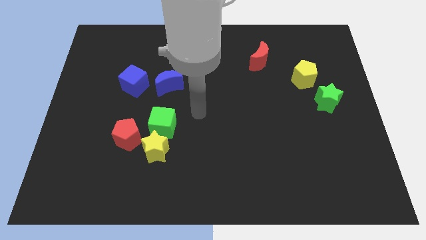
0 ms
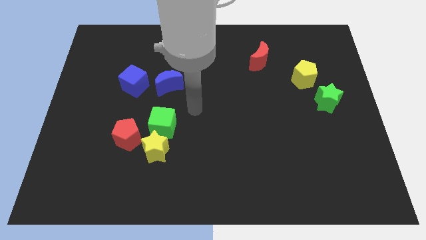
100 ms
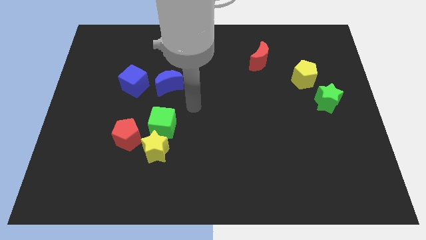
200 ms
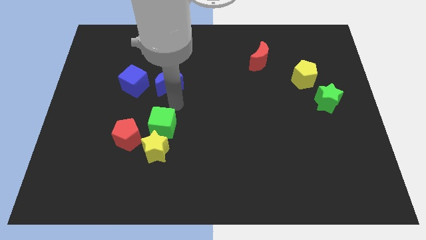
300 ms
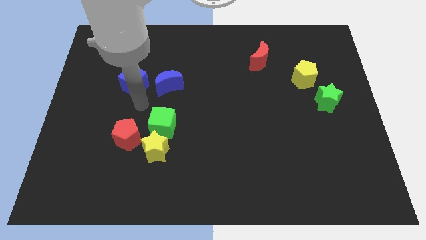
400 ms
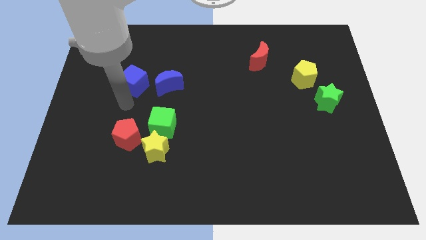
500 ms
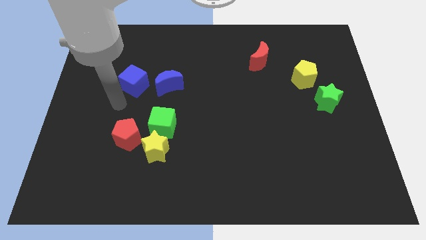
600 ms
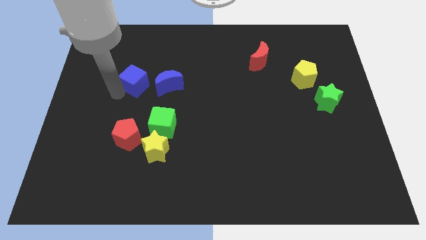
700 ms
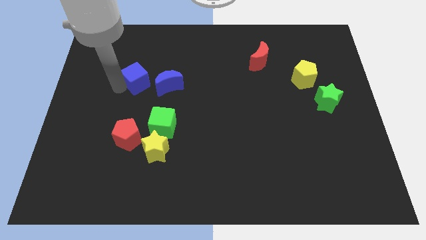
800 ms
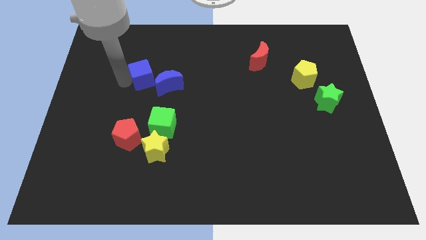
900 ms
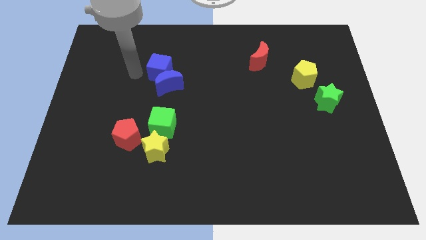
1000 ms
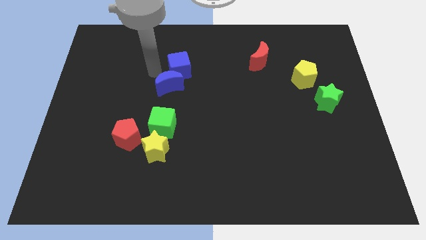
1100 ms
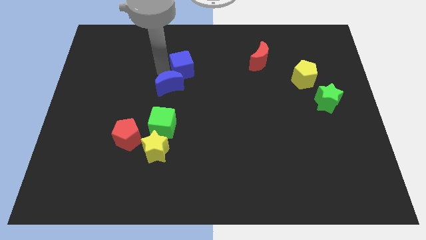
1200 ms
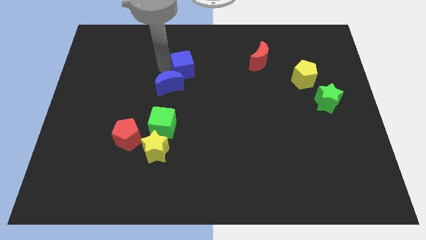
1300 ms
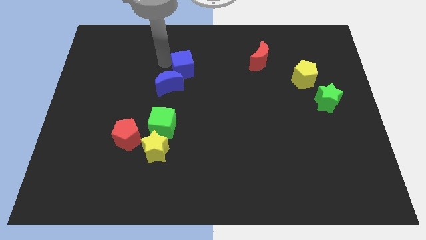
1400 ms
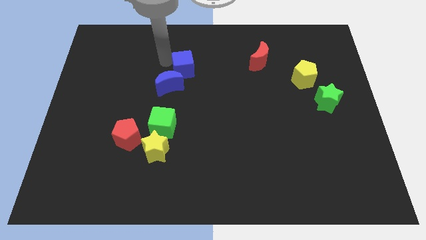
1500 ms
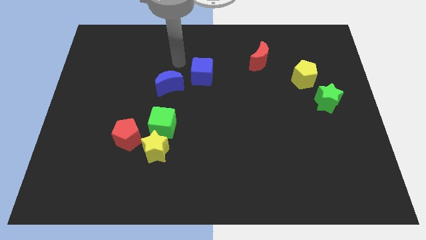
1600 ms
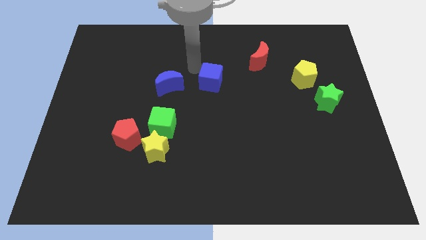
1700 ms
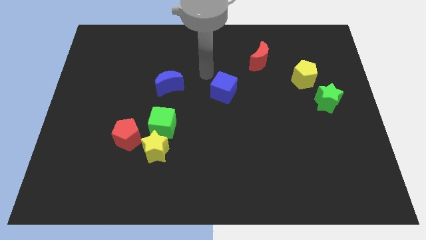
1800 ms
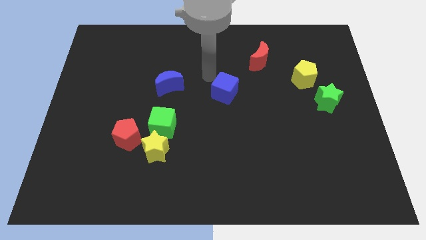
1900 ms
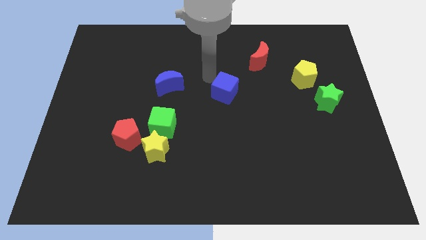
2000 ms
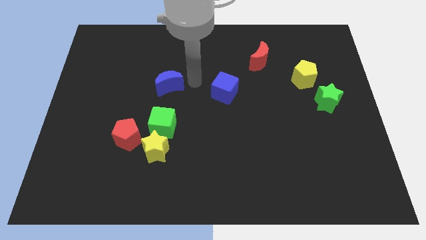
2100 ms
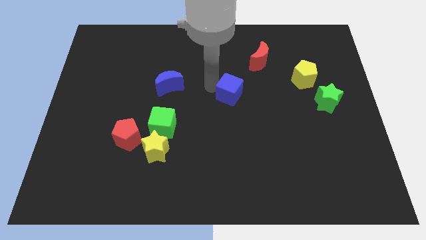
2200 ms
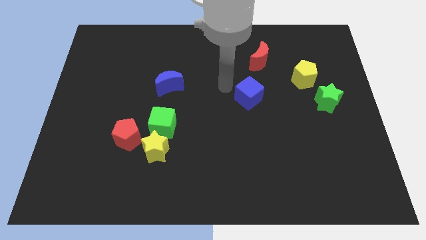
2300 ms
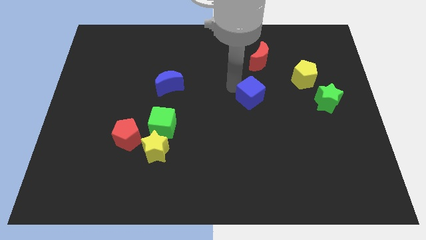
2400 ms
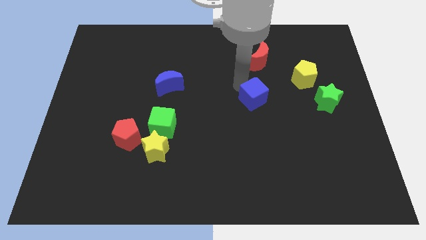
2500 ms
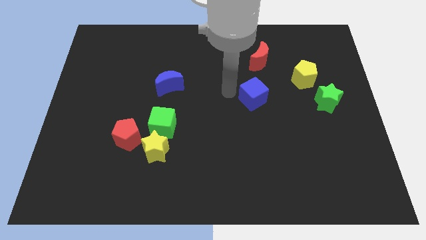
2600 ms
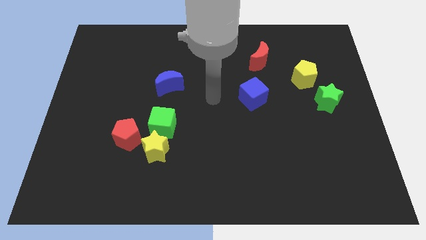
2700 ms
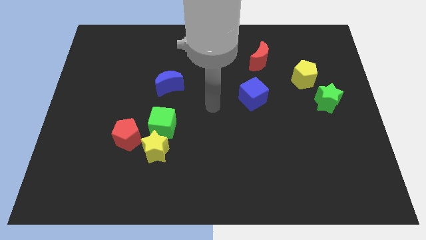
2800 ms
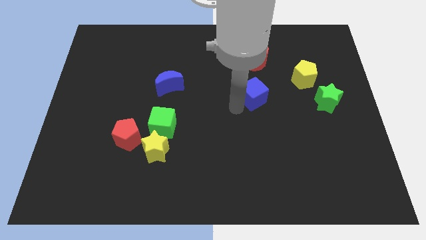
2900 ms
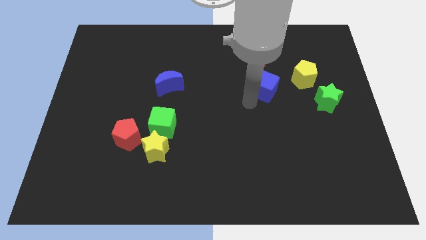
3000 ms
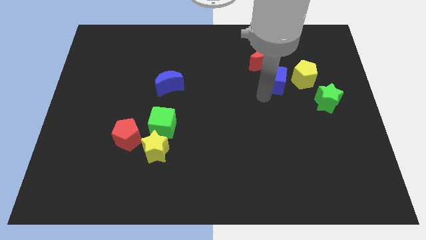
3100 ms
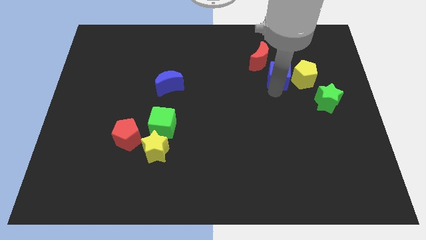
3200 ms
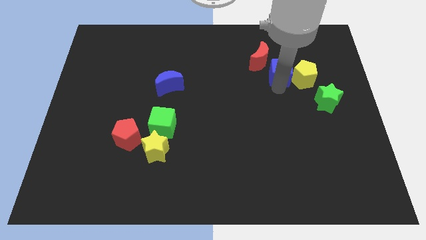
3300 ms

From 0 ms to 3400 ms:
put the blue cube close to the yellow pentagon

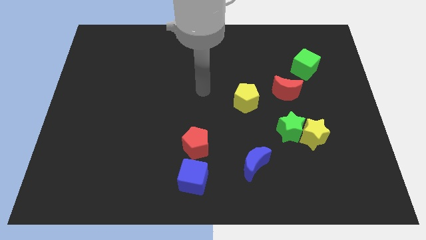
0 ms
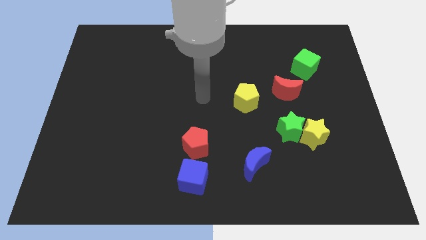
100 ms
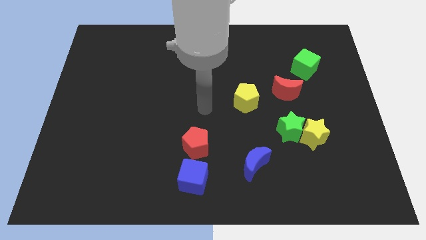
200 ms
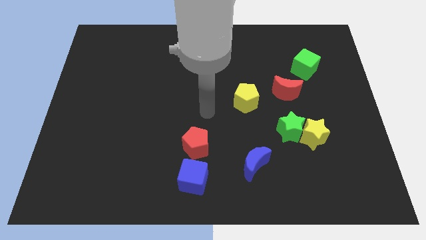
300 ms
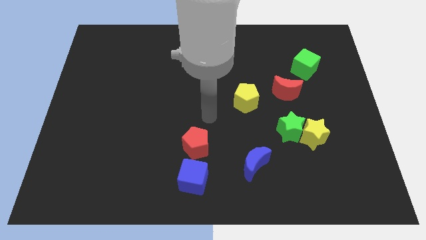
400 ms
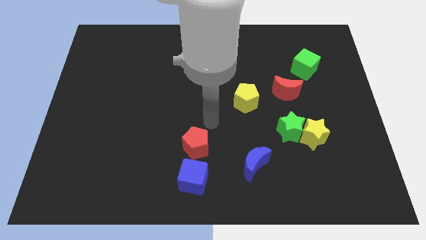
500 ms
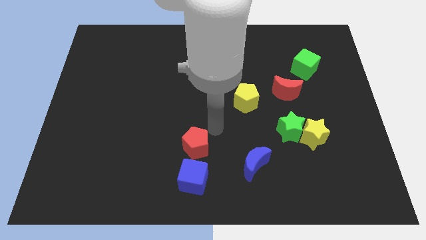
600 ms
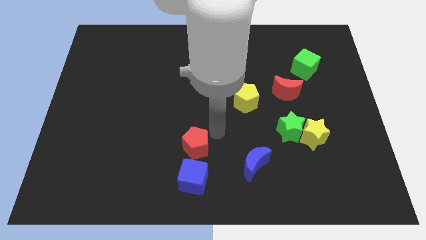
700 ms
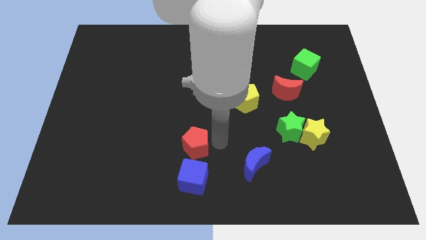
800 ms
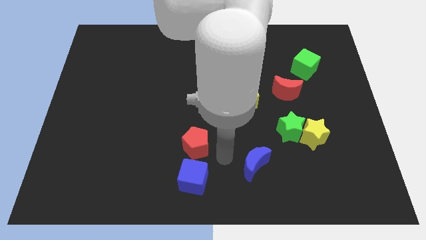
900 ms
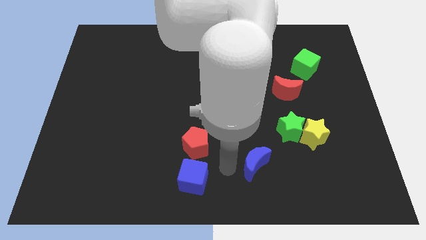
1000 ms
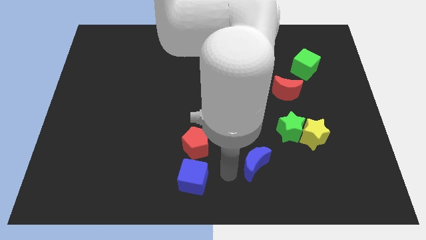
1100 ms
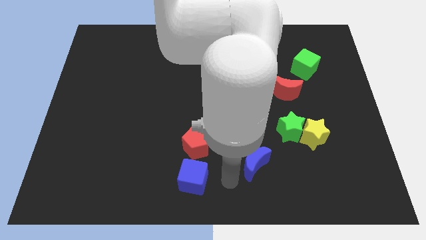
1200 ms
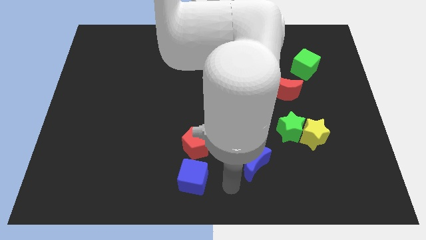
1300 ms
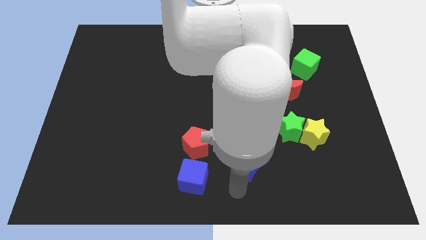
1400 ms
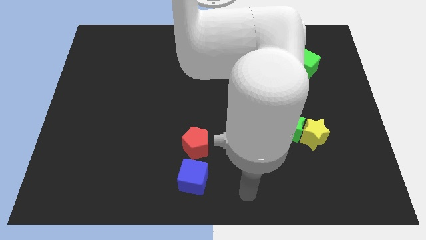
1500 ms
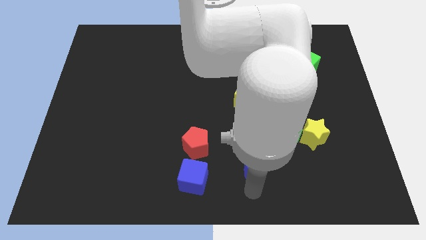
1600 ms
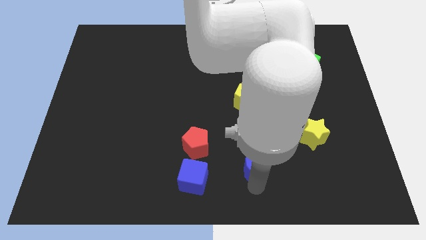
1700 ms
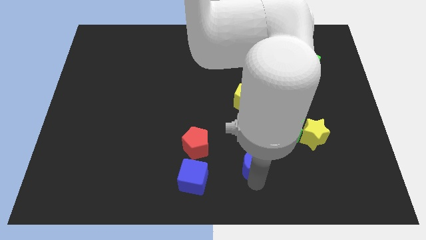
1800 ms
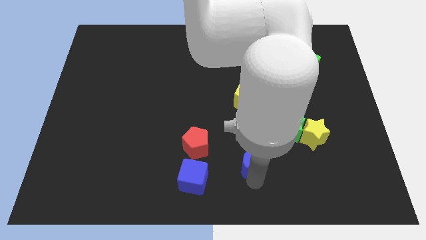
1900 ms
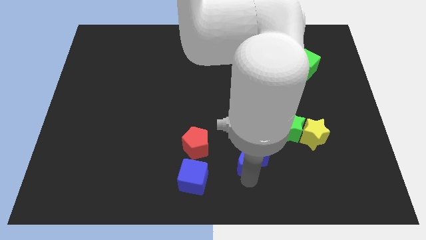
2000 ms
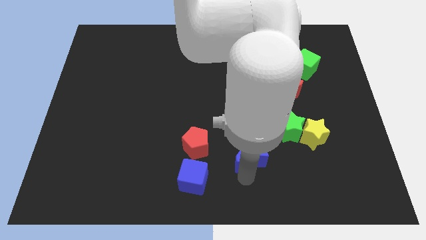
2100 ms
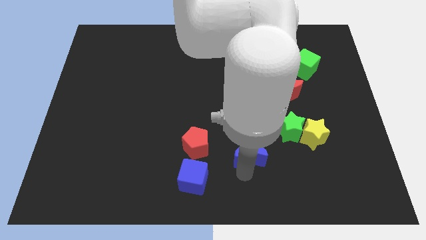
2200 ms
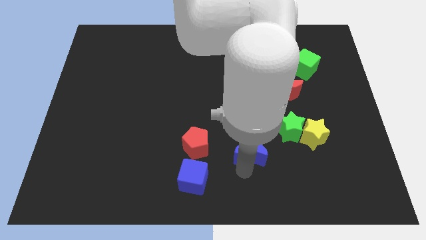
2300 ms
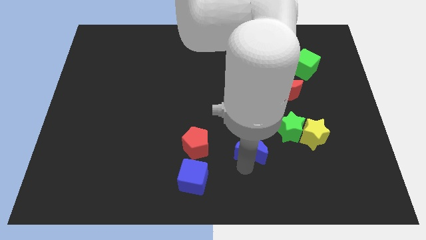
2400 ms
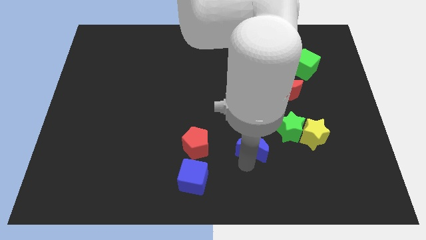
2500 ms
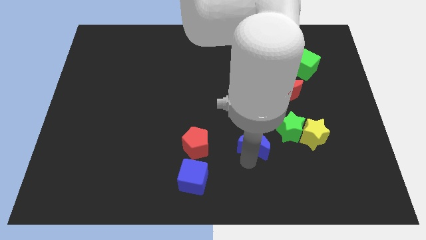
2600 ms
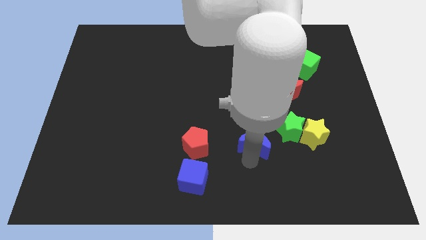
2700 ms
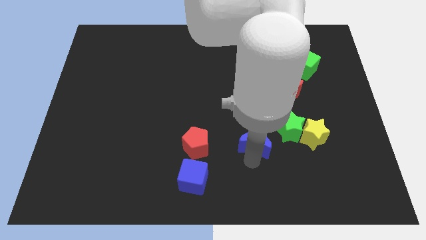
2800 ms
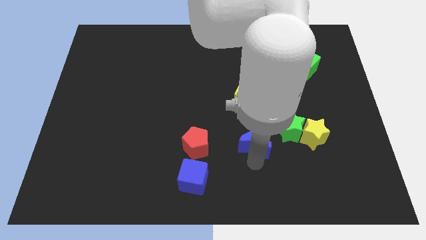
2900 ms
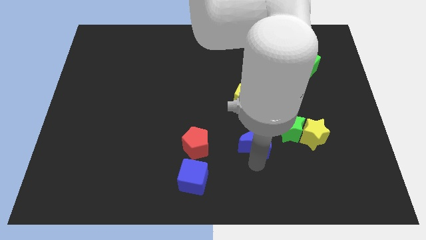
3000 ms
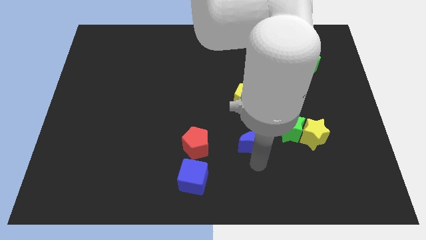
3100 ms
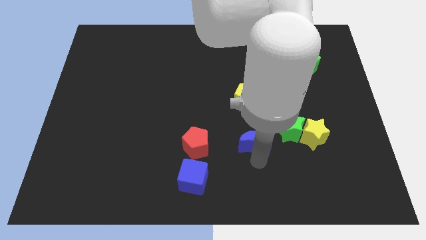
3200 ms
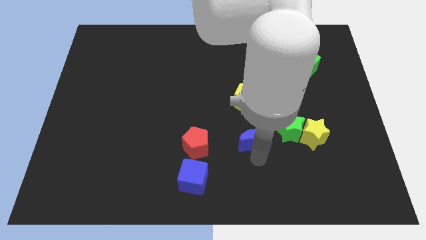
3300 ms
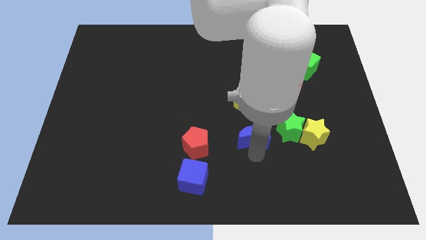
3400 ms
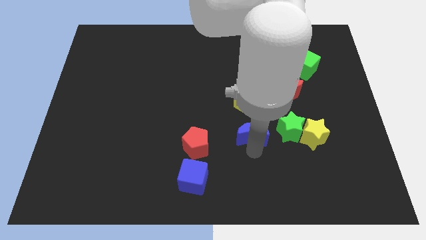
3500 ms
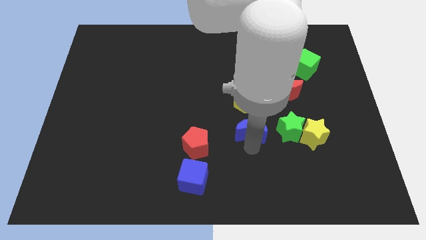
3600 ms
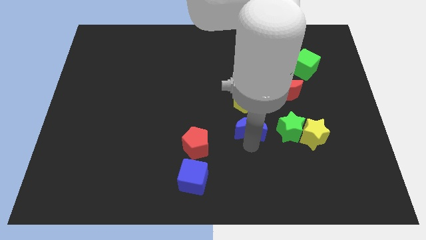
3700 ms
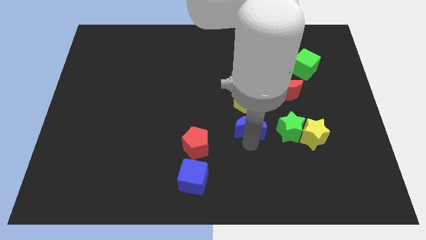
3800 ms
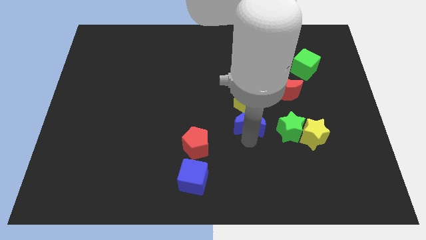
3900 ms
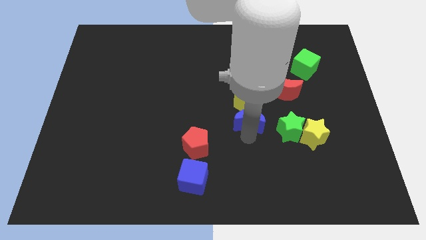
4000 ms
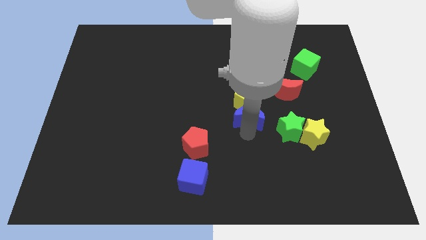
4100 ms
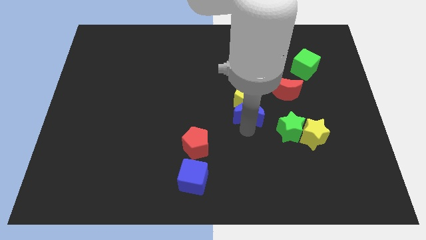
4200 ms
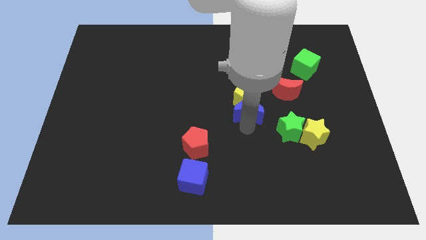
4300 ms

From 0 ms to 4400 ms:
move the blue moon to the yellow pentagon

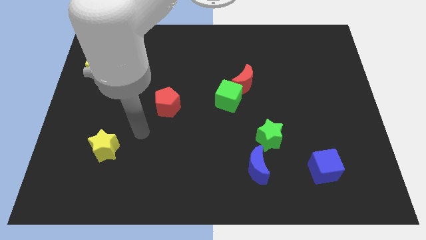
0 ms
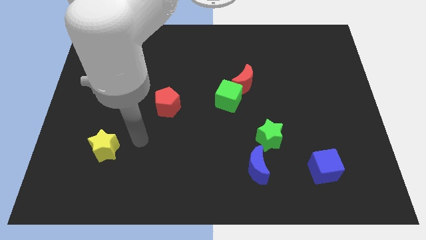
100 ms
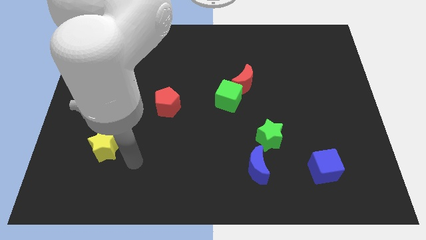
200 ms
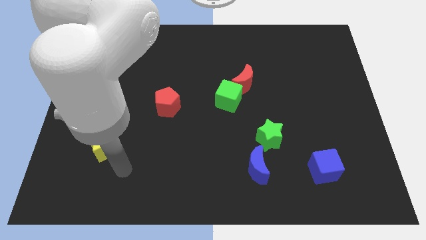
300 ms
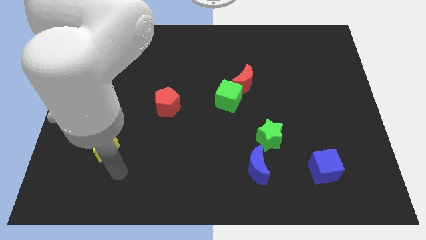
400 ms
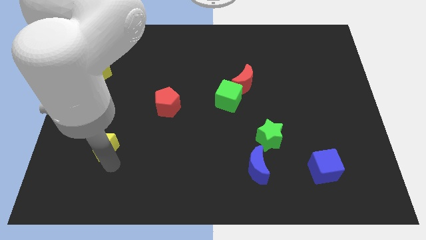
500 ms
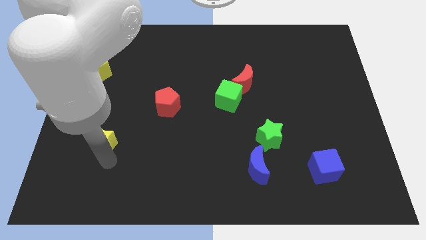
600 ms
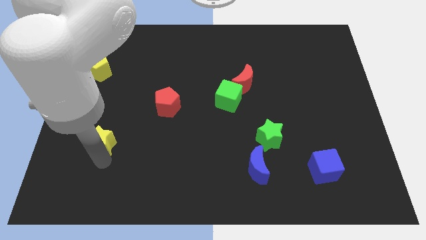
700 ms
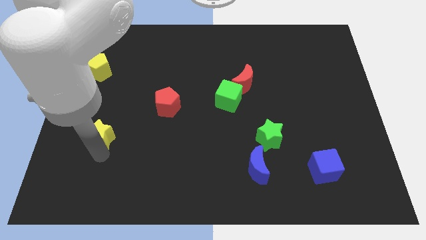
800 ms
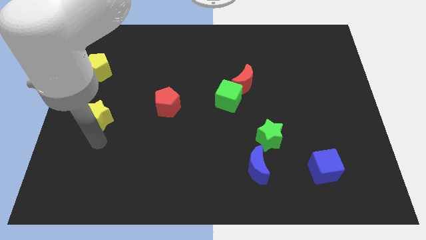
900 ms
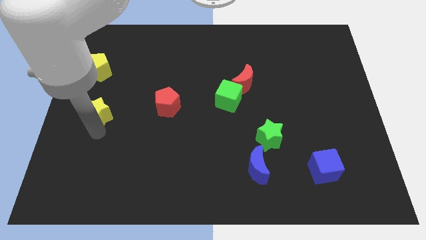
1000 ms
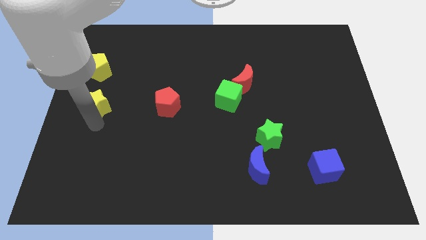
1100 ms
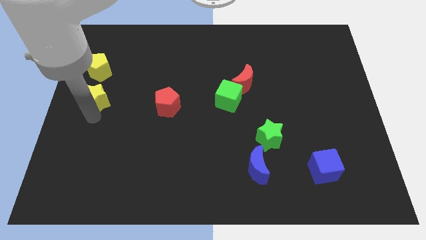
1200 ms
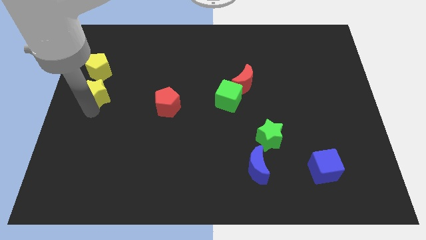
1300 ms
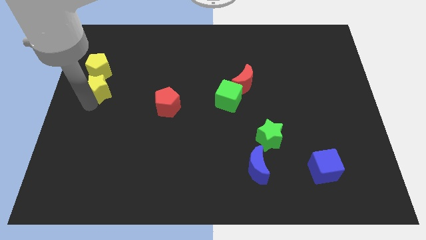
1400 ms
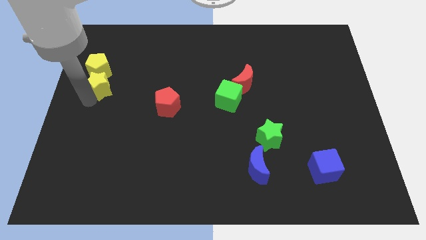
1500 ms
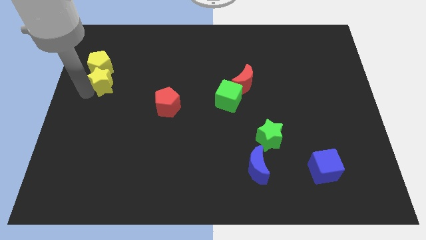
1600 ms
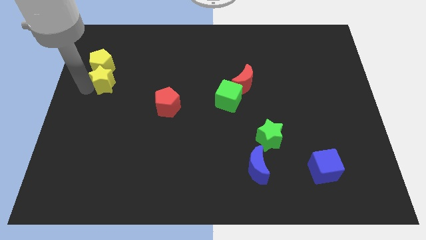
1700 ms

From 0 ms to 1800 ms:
move the yellow star towards the yellow pentagon
